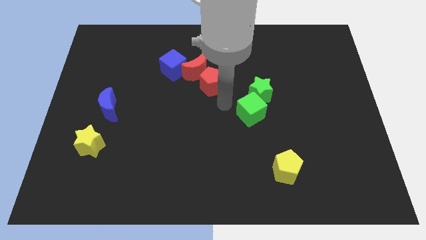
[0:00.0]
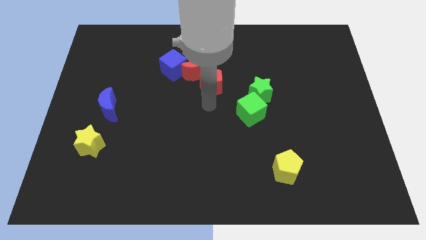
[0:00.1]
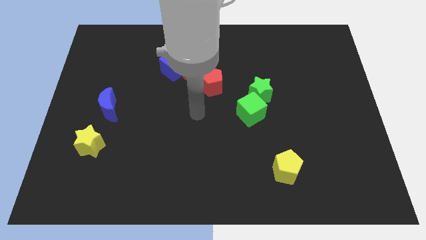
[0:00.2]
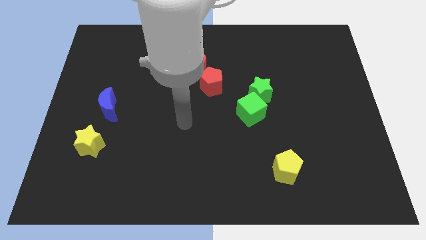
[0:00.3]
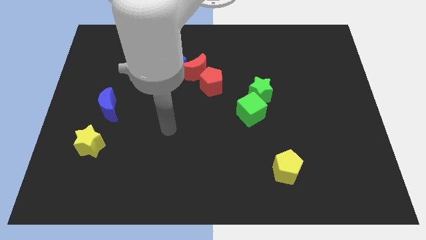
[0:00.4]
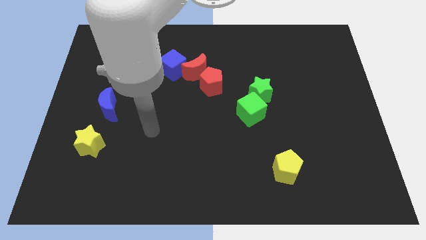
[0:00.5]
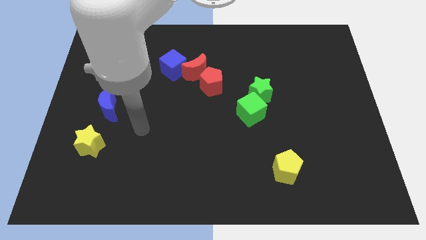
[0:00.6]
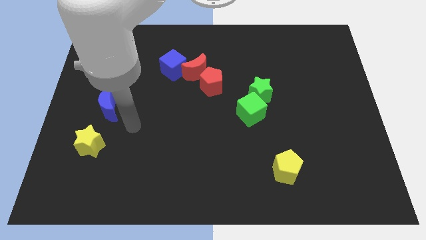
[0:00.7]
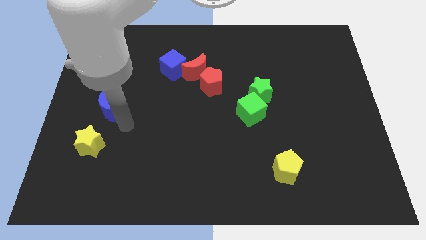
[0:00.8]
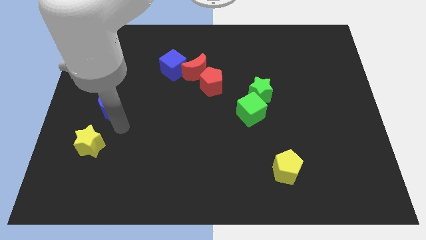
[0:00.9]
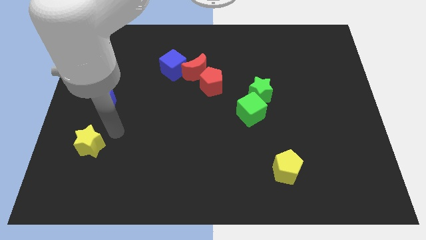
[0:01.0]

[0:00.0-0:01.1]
point your arm at the bottom of the blue crescent

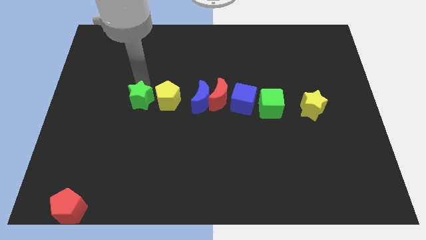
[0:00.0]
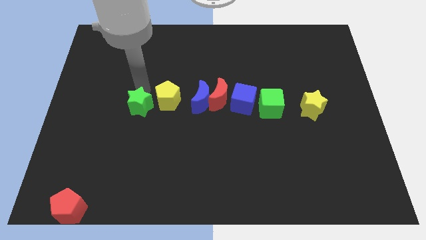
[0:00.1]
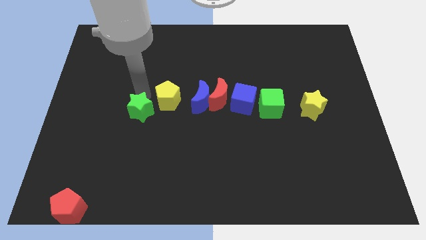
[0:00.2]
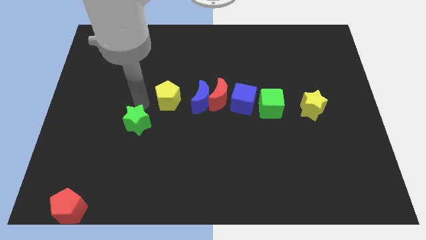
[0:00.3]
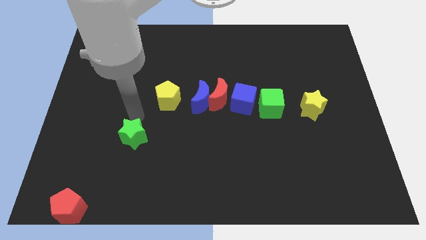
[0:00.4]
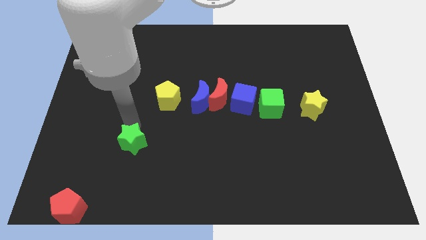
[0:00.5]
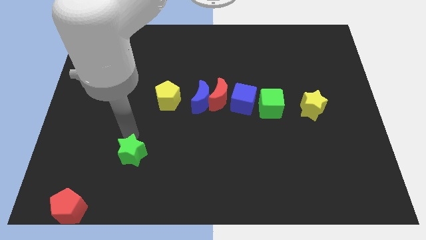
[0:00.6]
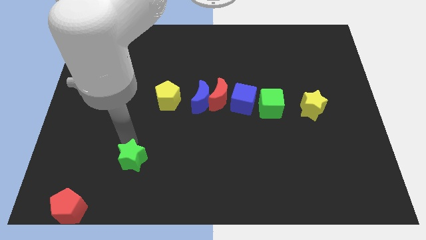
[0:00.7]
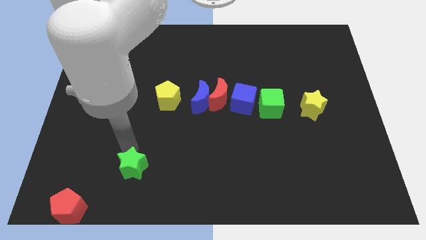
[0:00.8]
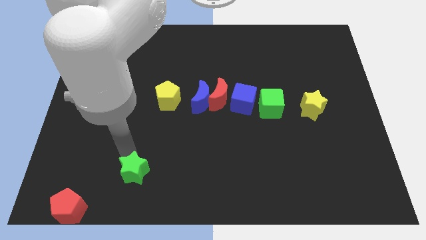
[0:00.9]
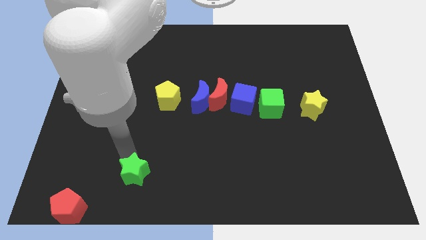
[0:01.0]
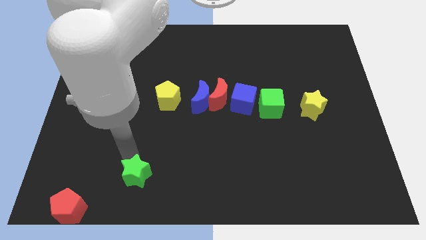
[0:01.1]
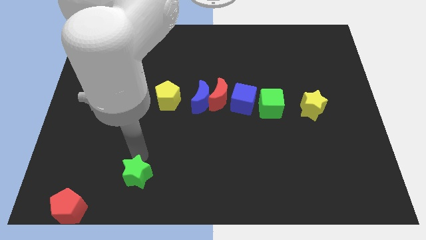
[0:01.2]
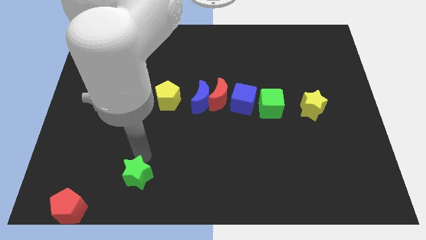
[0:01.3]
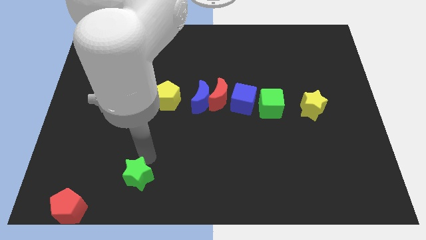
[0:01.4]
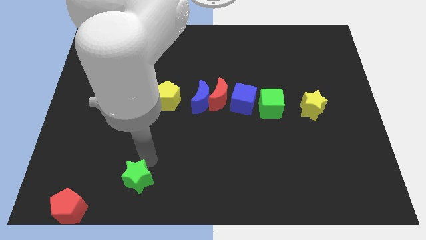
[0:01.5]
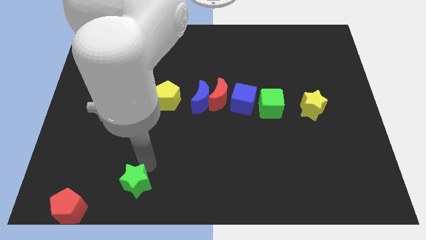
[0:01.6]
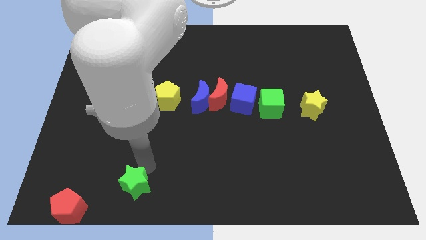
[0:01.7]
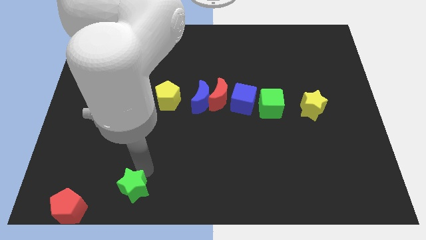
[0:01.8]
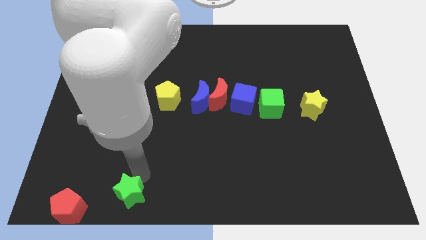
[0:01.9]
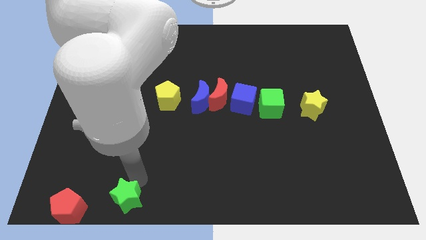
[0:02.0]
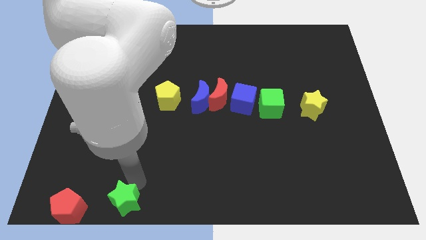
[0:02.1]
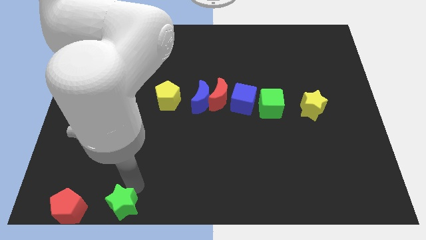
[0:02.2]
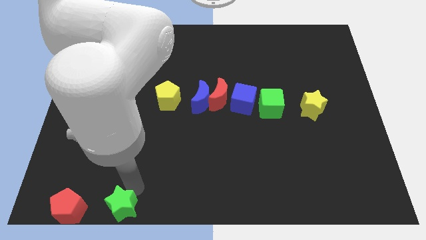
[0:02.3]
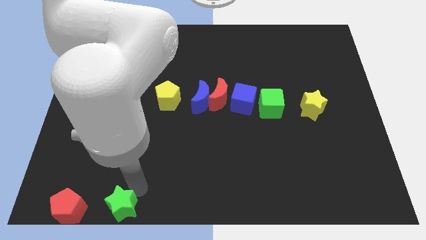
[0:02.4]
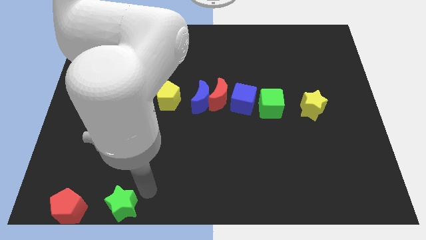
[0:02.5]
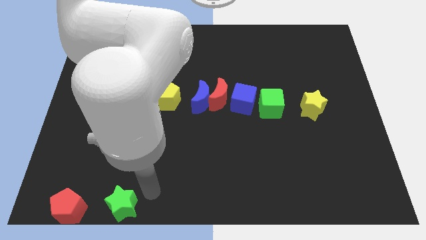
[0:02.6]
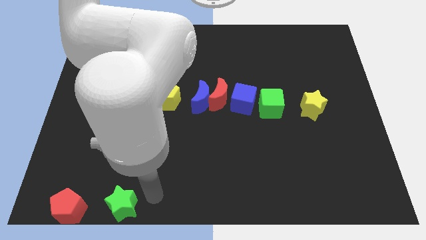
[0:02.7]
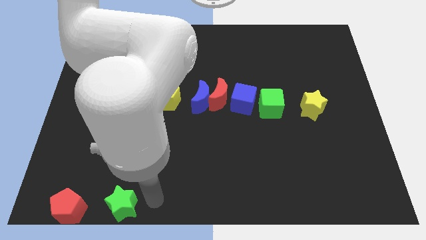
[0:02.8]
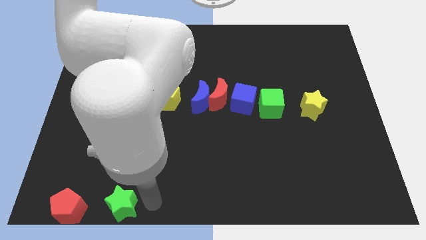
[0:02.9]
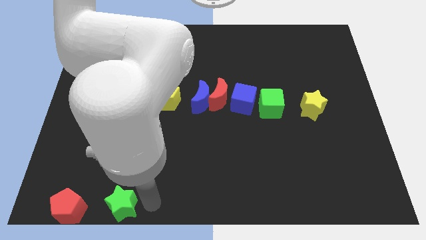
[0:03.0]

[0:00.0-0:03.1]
push the green star towards right of the red pentagon

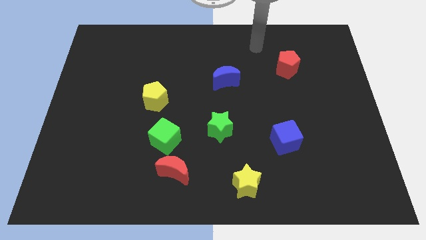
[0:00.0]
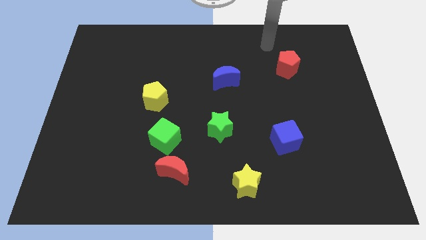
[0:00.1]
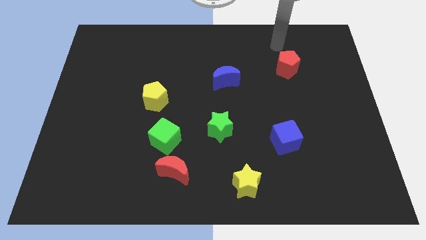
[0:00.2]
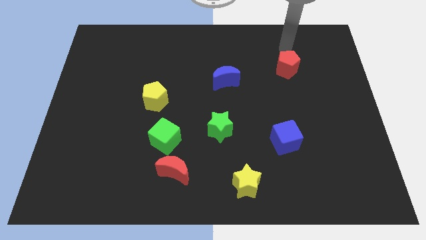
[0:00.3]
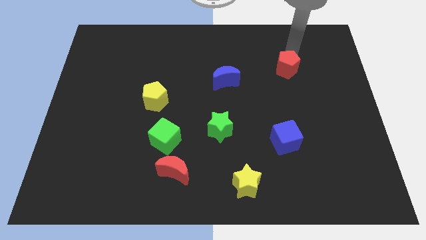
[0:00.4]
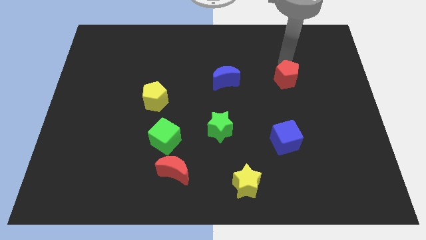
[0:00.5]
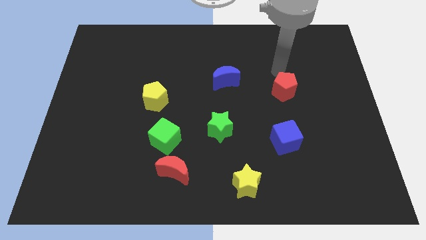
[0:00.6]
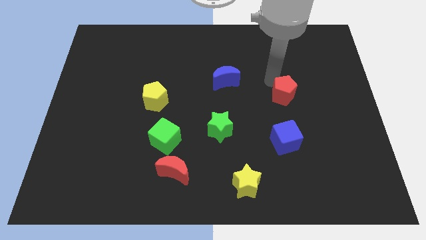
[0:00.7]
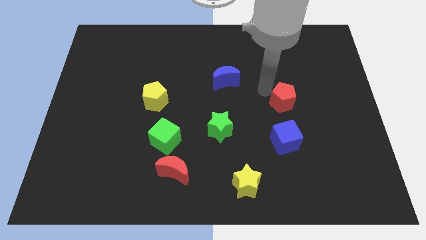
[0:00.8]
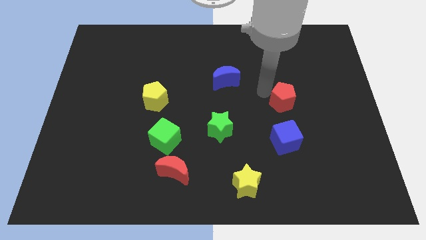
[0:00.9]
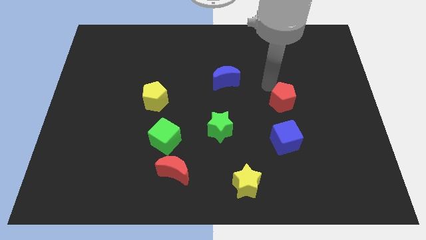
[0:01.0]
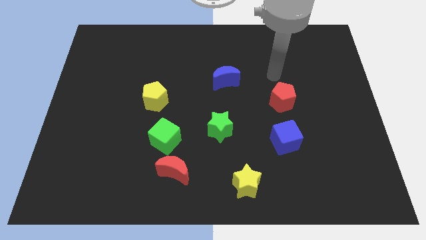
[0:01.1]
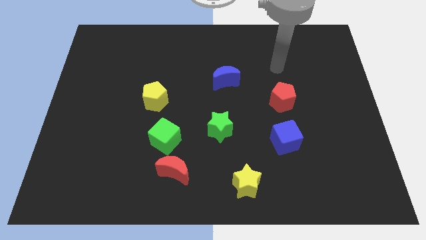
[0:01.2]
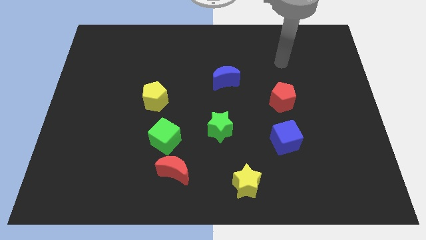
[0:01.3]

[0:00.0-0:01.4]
push red pentagon towards blue cube

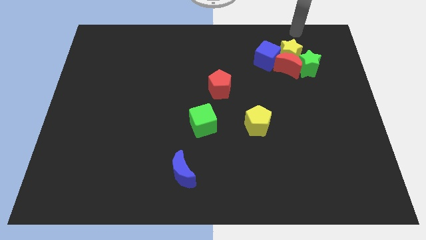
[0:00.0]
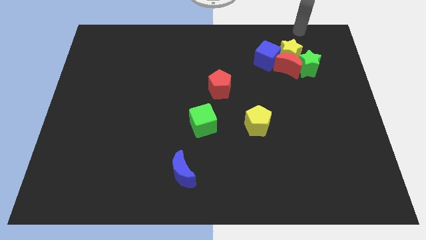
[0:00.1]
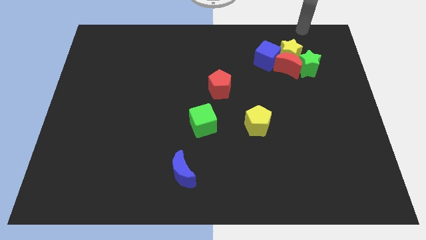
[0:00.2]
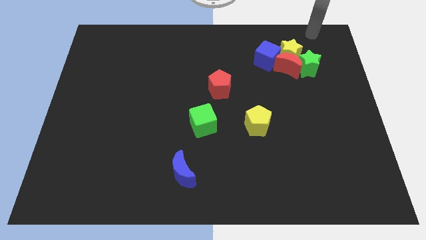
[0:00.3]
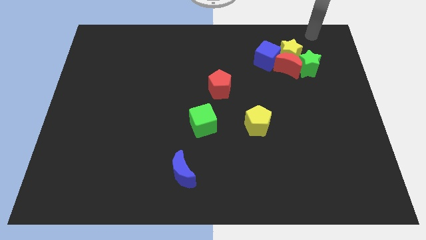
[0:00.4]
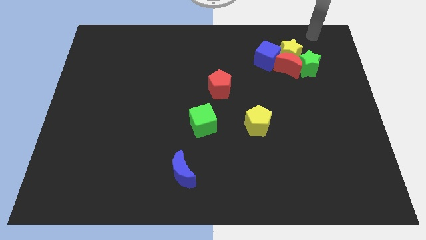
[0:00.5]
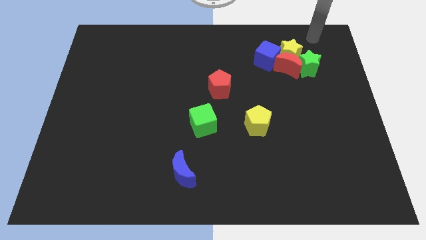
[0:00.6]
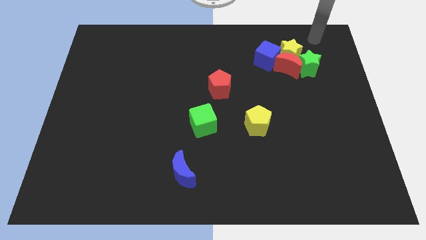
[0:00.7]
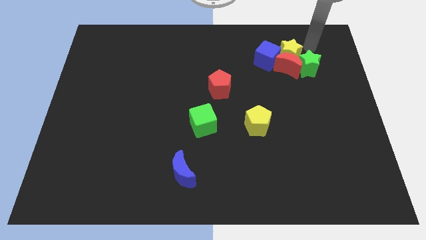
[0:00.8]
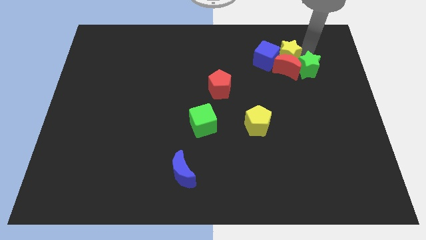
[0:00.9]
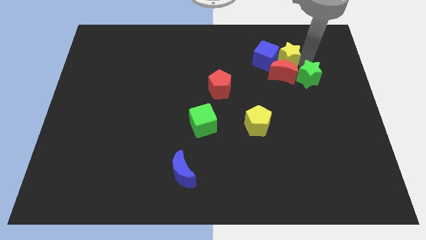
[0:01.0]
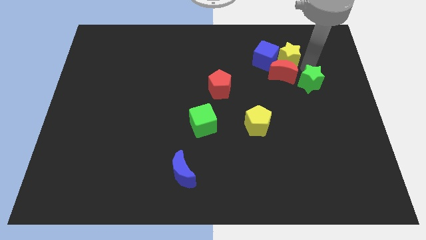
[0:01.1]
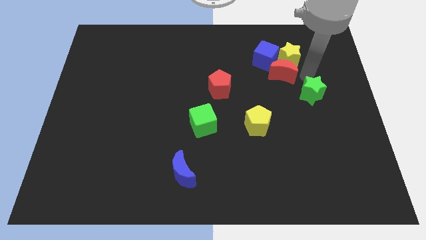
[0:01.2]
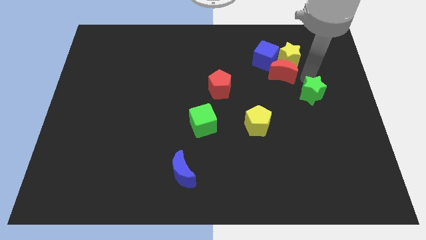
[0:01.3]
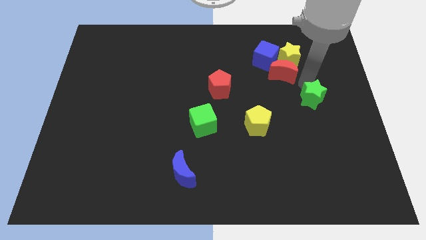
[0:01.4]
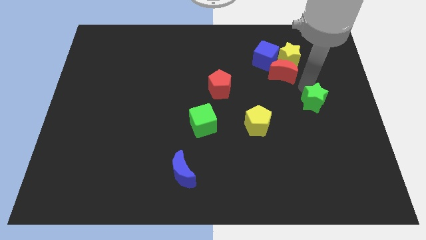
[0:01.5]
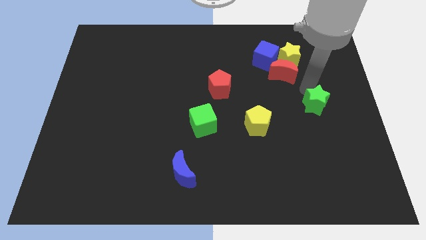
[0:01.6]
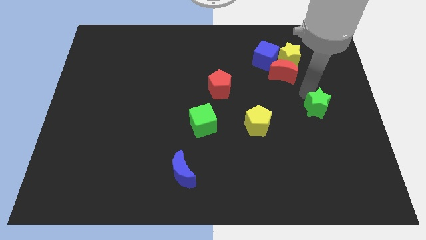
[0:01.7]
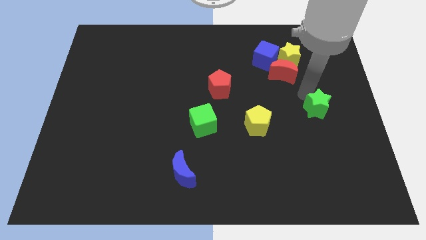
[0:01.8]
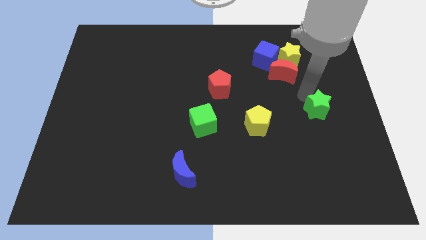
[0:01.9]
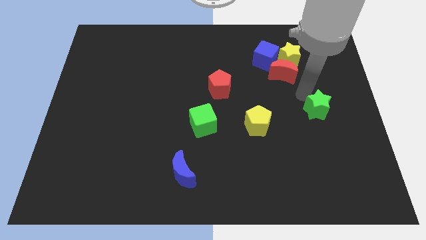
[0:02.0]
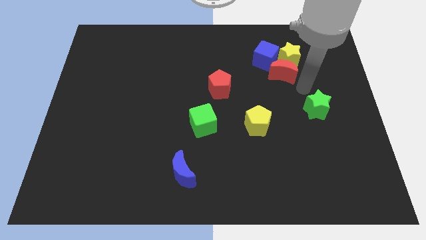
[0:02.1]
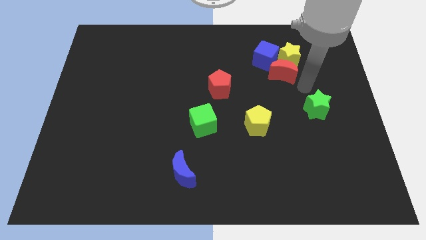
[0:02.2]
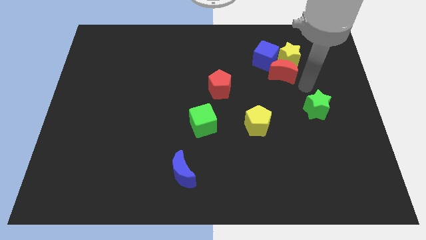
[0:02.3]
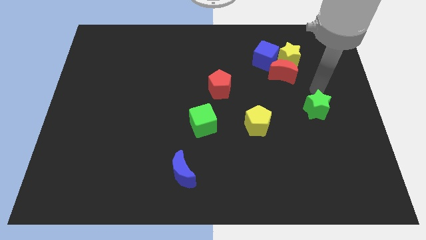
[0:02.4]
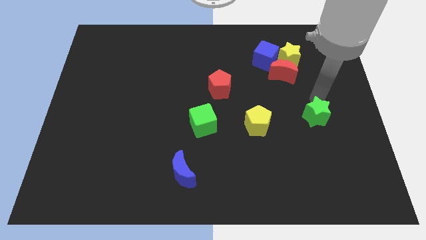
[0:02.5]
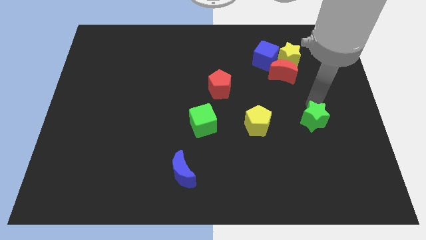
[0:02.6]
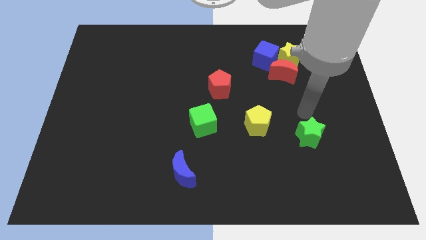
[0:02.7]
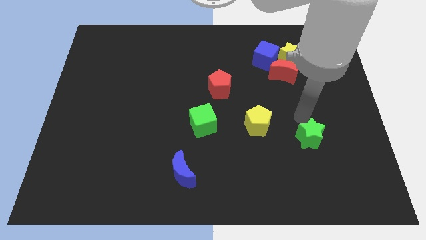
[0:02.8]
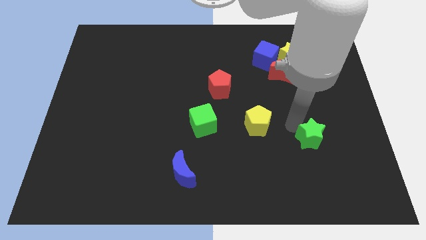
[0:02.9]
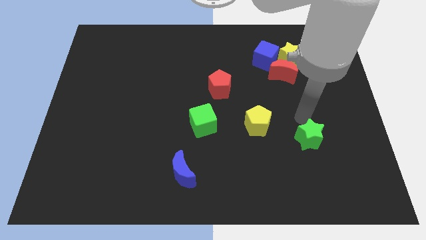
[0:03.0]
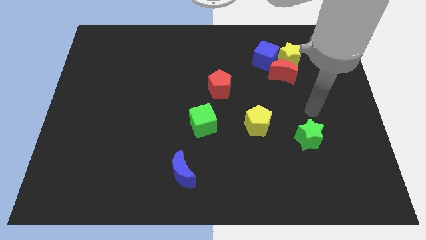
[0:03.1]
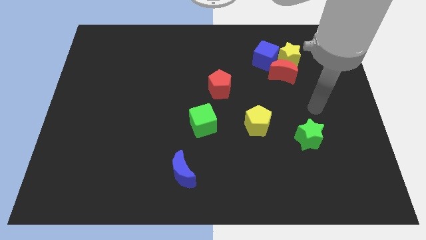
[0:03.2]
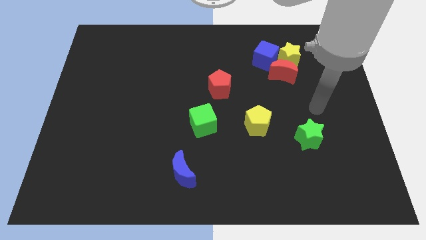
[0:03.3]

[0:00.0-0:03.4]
place the green star right to the yellow pentagon
